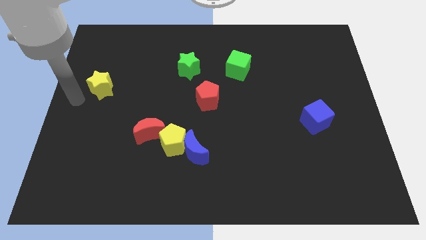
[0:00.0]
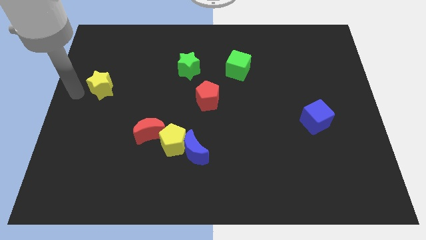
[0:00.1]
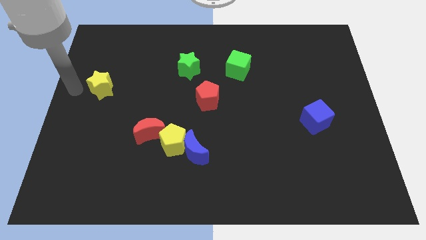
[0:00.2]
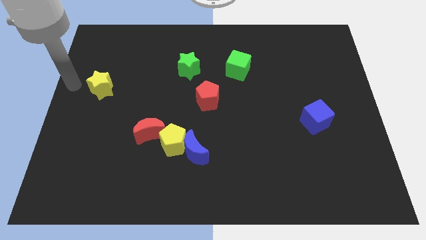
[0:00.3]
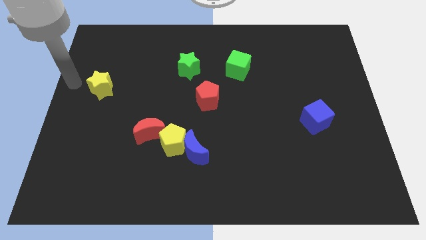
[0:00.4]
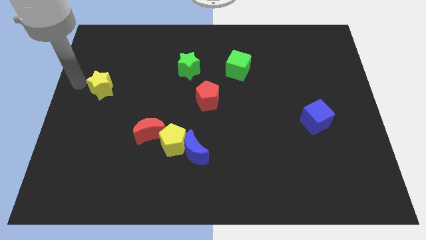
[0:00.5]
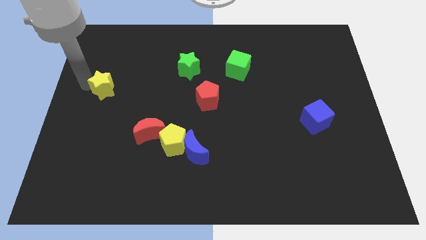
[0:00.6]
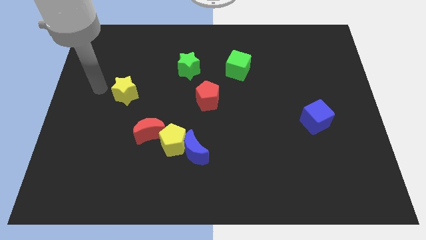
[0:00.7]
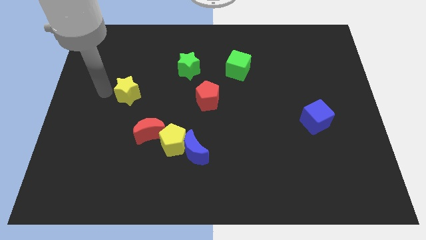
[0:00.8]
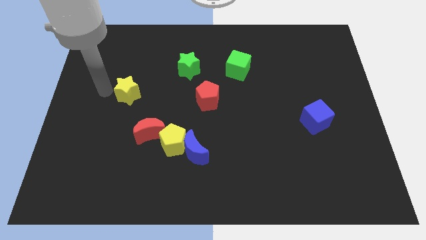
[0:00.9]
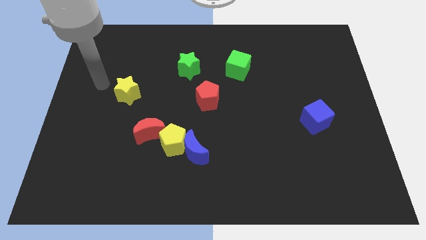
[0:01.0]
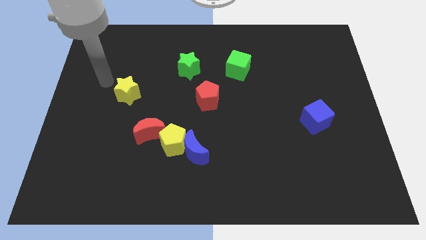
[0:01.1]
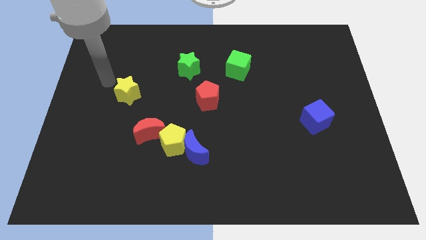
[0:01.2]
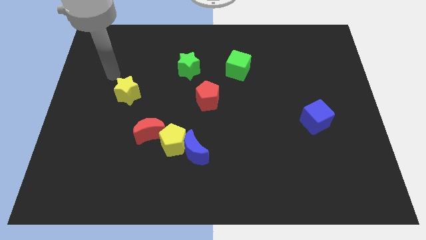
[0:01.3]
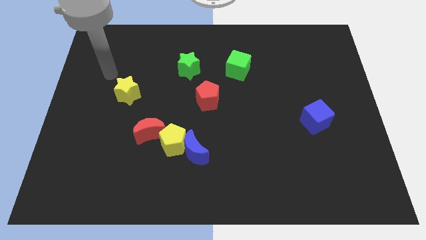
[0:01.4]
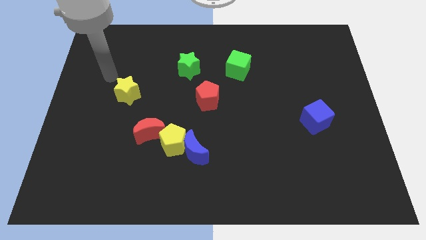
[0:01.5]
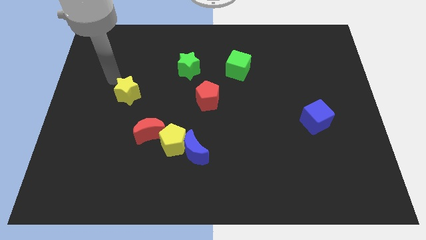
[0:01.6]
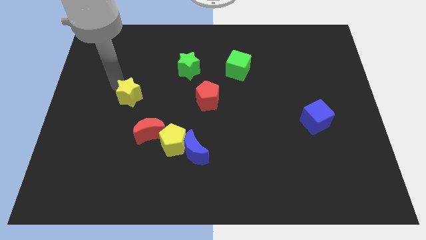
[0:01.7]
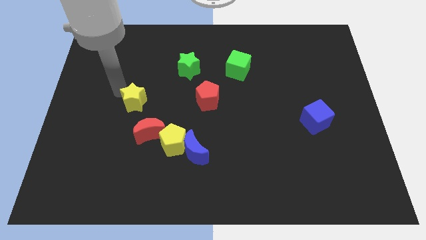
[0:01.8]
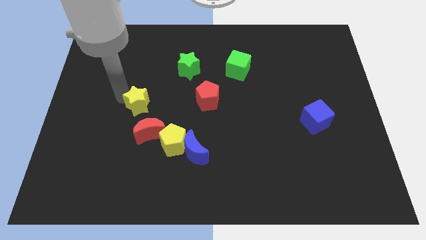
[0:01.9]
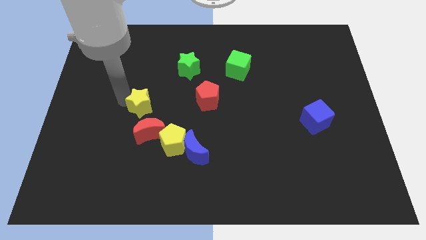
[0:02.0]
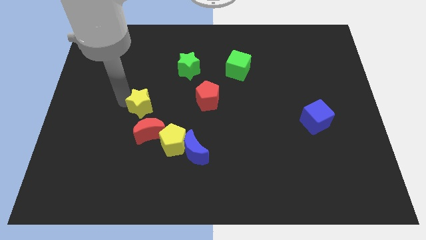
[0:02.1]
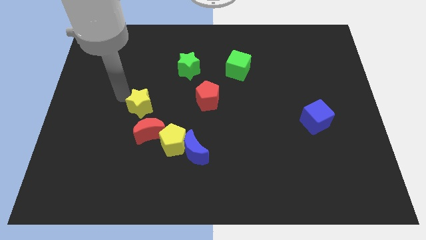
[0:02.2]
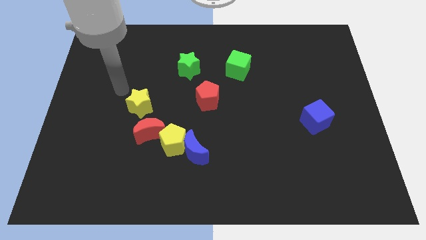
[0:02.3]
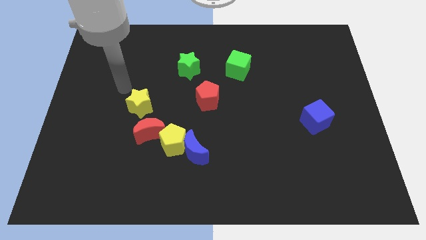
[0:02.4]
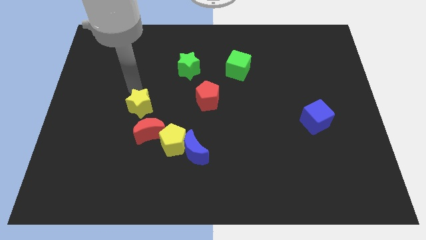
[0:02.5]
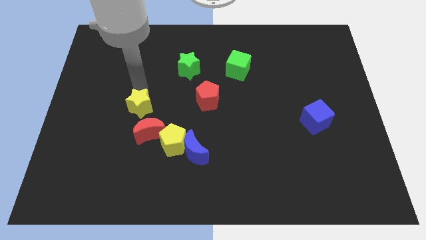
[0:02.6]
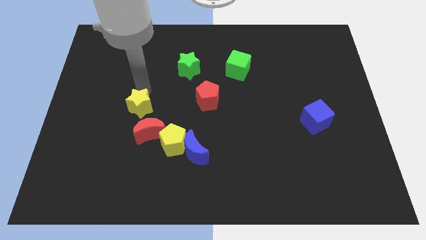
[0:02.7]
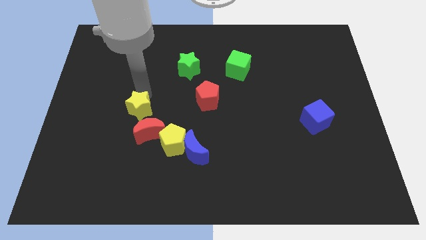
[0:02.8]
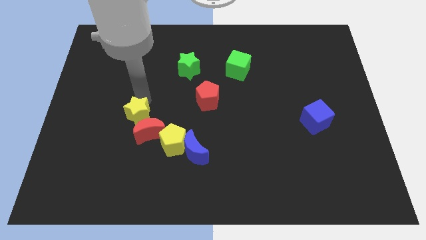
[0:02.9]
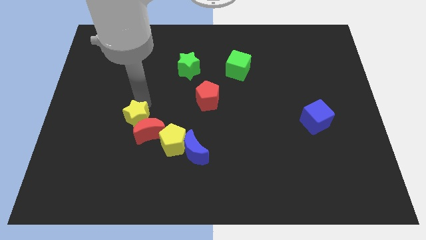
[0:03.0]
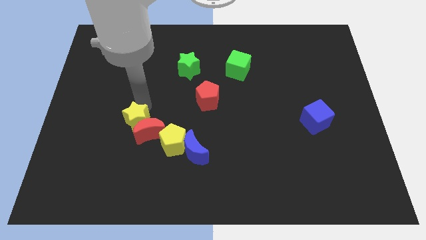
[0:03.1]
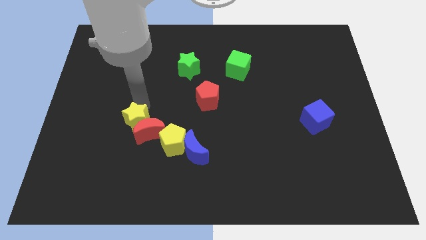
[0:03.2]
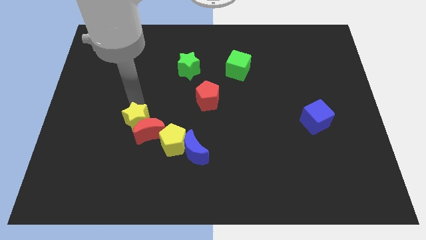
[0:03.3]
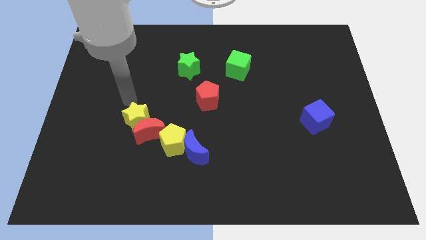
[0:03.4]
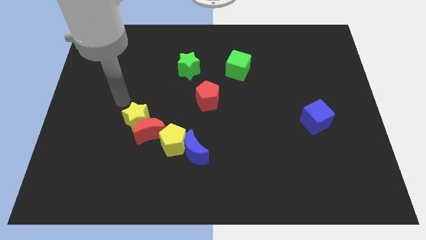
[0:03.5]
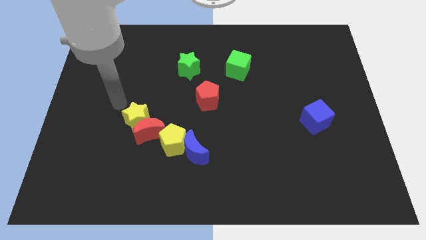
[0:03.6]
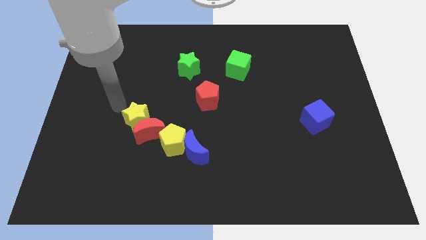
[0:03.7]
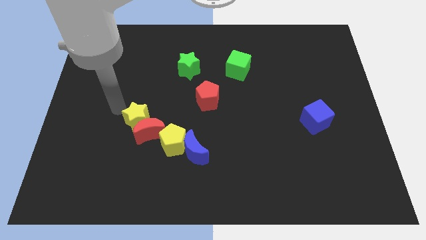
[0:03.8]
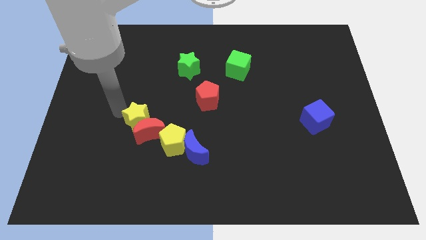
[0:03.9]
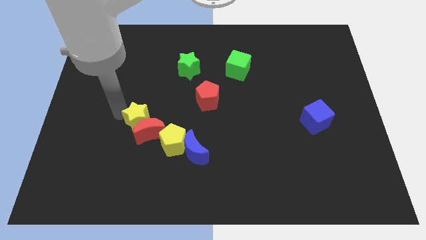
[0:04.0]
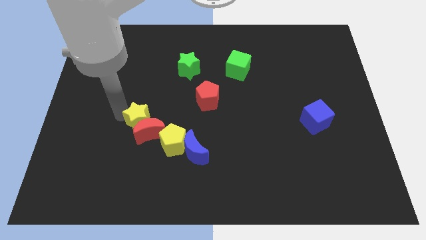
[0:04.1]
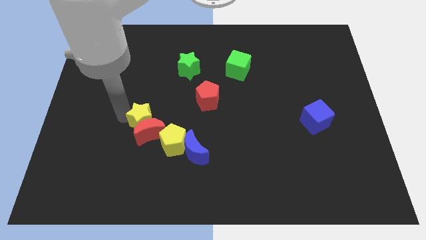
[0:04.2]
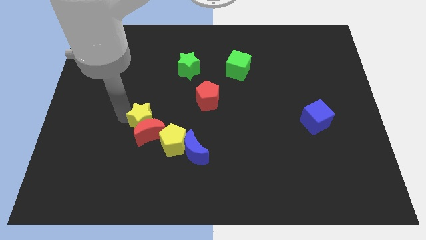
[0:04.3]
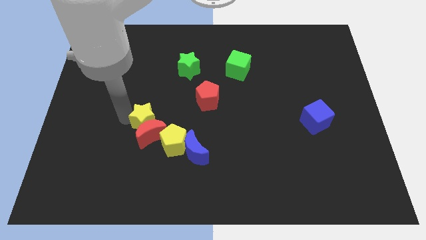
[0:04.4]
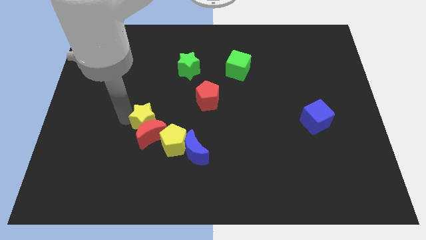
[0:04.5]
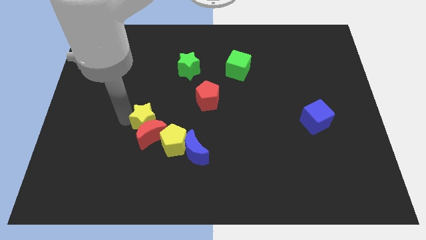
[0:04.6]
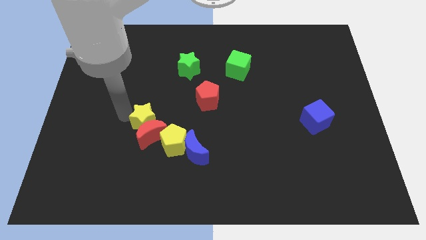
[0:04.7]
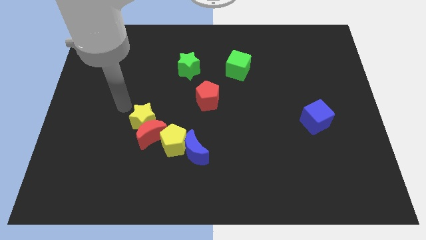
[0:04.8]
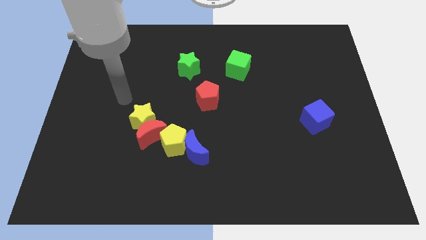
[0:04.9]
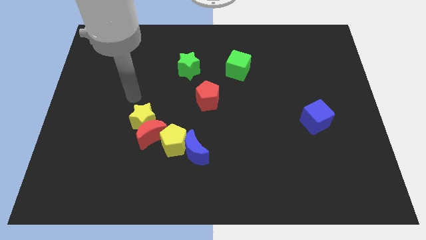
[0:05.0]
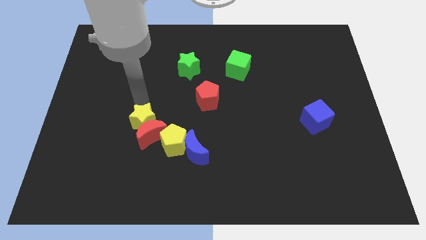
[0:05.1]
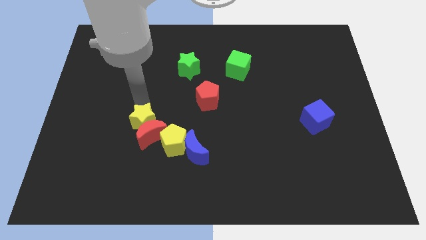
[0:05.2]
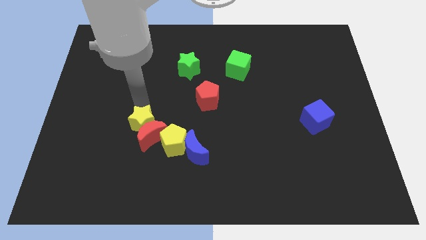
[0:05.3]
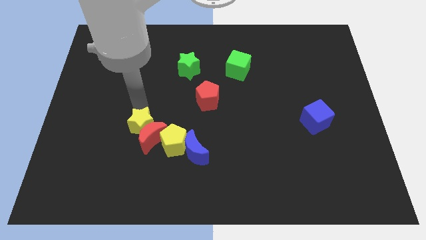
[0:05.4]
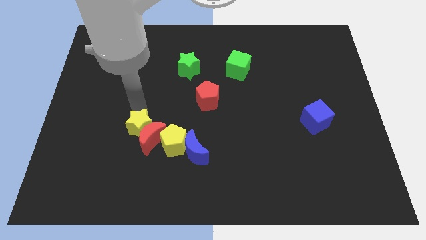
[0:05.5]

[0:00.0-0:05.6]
move the yellow star into the red crescent

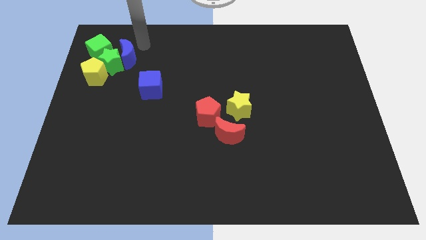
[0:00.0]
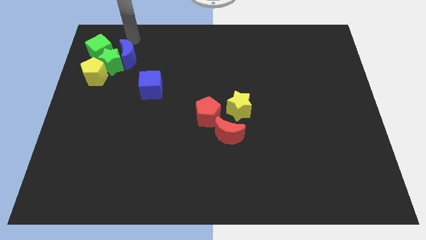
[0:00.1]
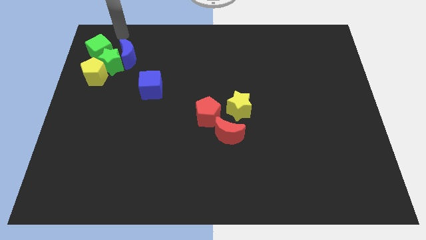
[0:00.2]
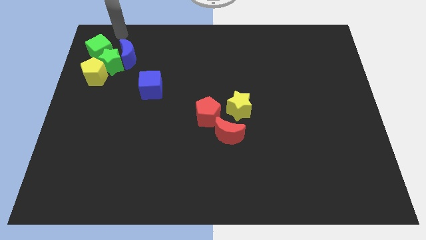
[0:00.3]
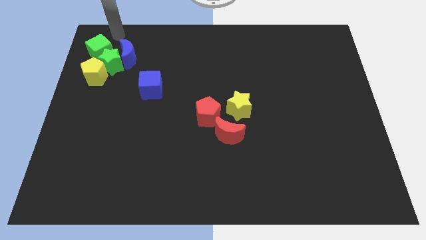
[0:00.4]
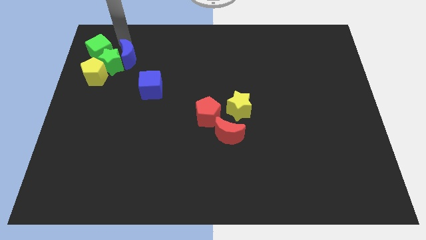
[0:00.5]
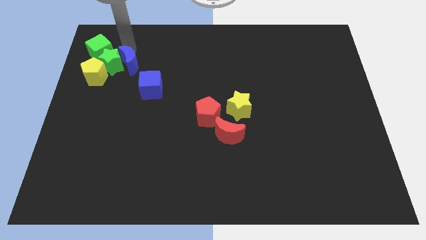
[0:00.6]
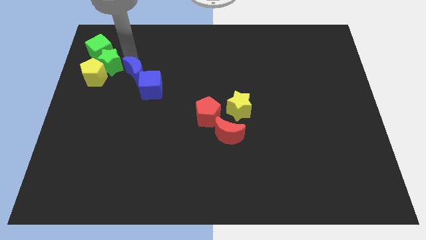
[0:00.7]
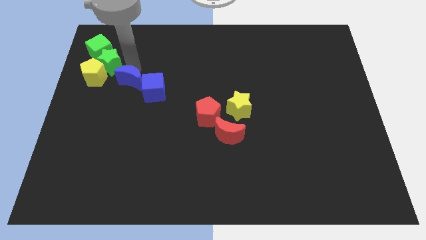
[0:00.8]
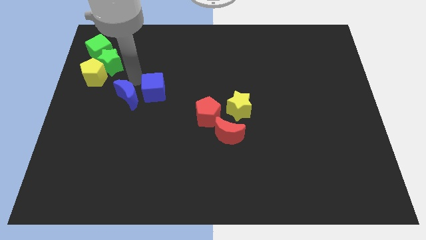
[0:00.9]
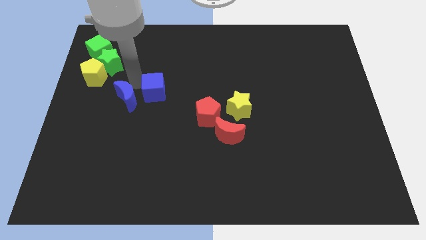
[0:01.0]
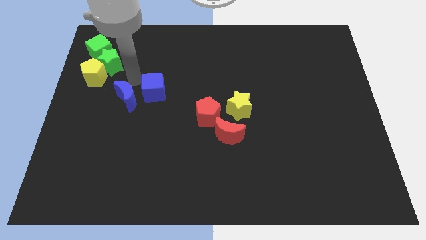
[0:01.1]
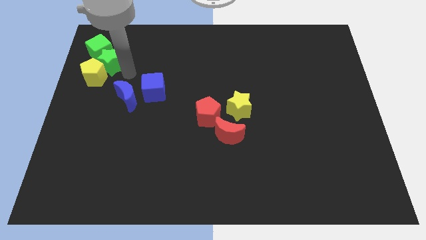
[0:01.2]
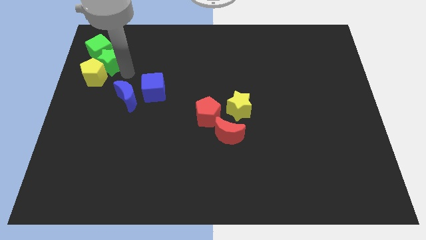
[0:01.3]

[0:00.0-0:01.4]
place the blue crescent to the left of the blue cube

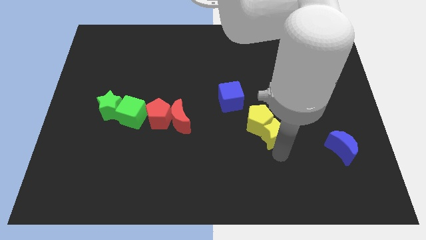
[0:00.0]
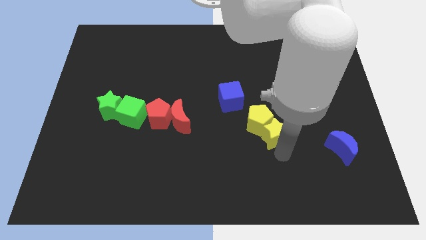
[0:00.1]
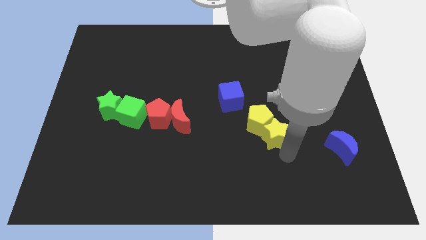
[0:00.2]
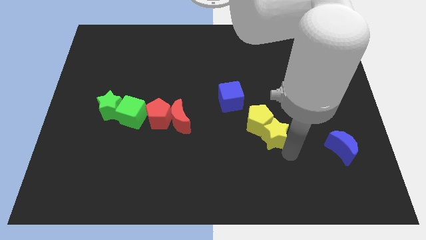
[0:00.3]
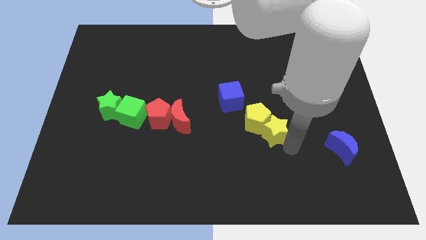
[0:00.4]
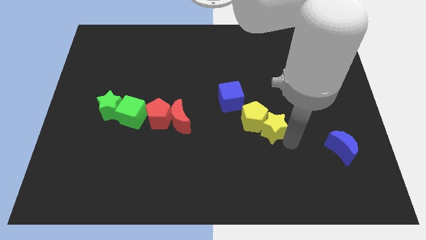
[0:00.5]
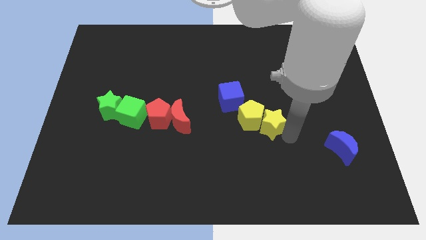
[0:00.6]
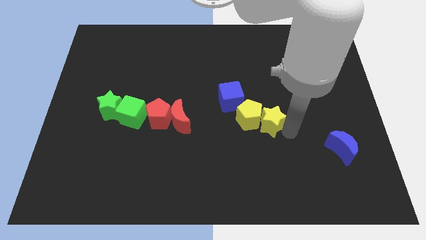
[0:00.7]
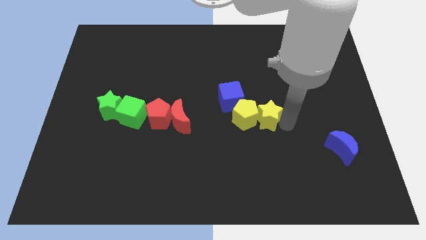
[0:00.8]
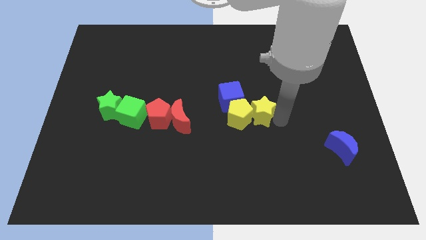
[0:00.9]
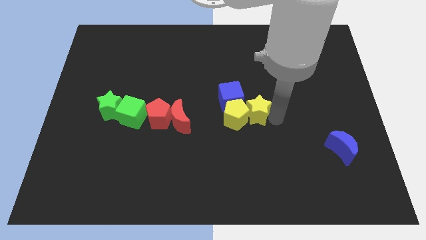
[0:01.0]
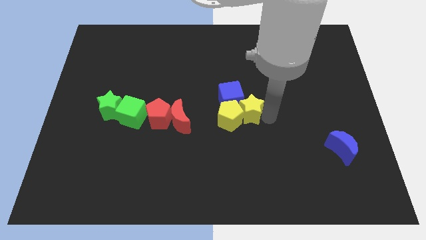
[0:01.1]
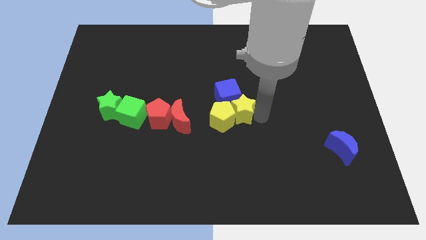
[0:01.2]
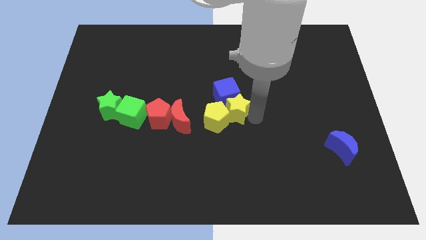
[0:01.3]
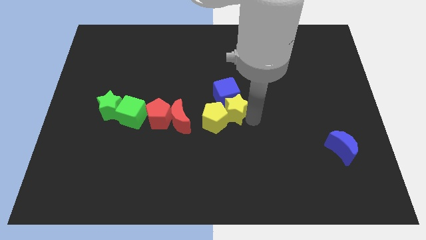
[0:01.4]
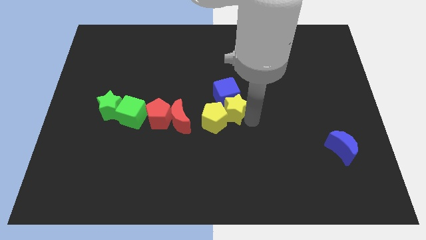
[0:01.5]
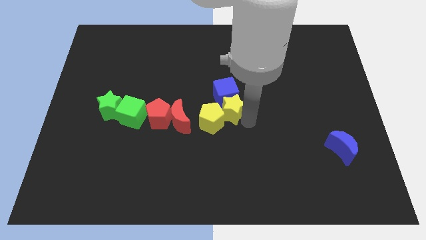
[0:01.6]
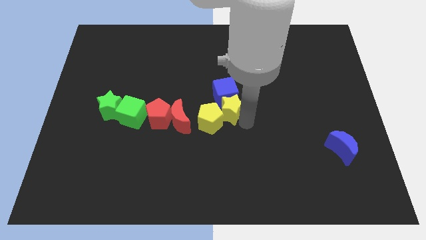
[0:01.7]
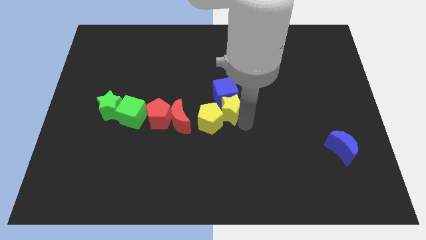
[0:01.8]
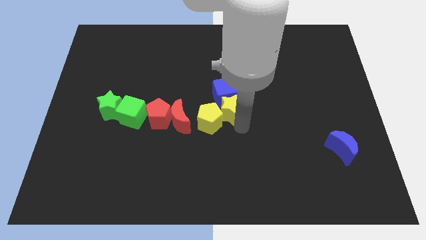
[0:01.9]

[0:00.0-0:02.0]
place the yellow star below the blue the blue cube

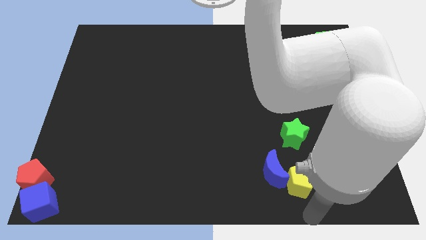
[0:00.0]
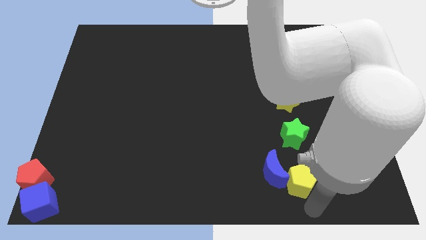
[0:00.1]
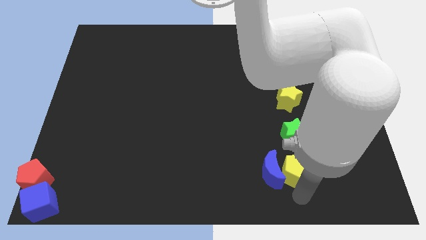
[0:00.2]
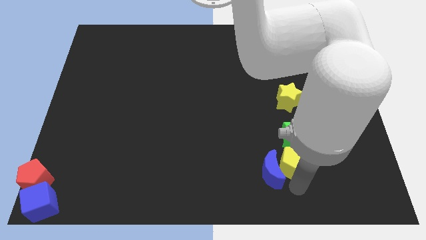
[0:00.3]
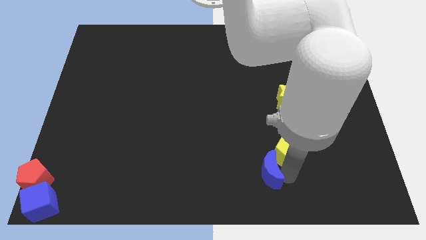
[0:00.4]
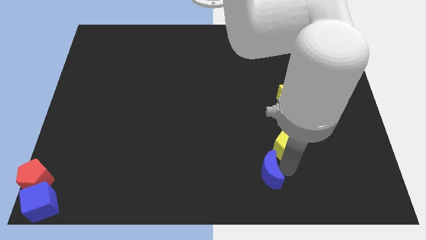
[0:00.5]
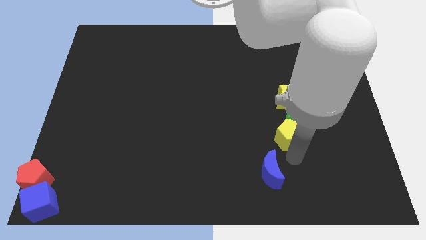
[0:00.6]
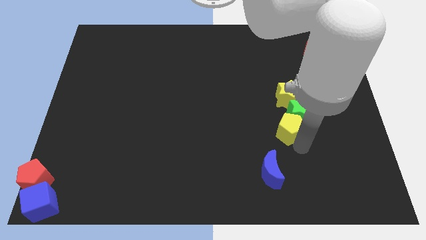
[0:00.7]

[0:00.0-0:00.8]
move the yellow pentagon into the green star
